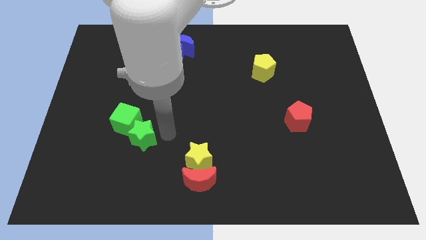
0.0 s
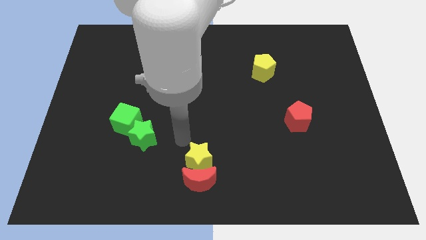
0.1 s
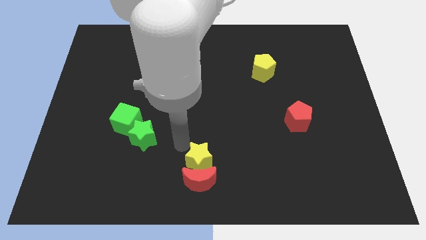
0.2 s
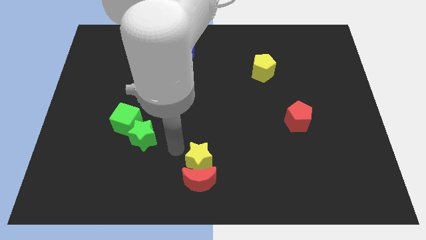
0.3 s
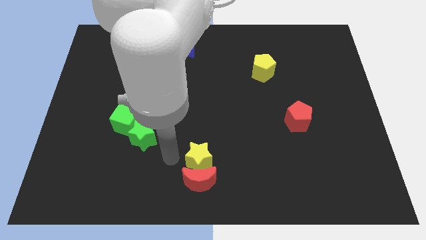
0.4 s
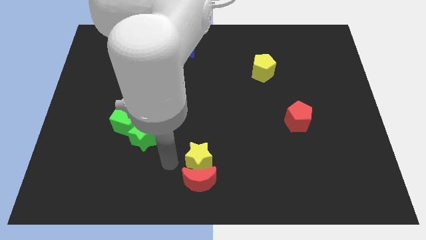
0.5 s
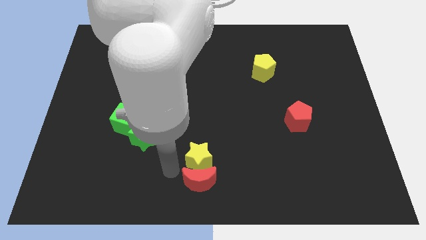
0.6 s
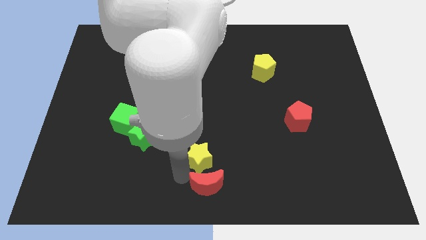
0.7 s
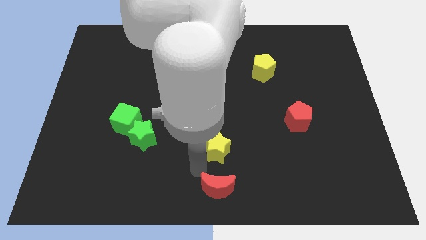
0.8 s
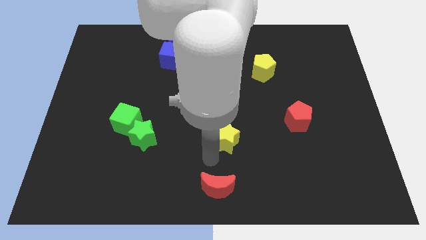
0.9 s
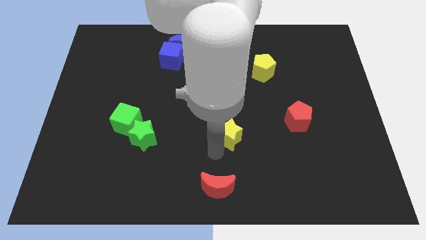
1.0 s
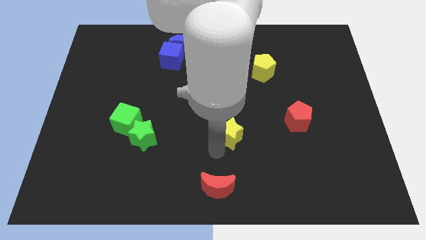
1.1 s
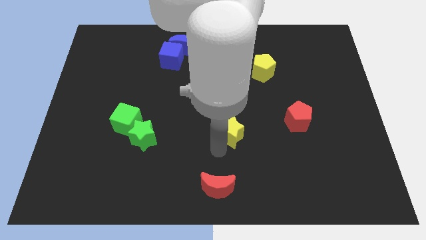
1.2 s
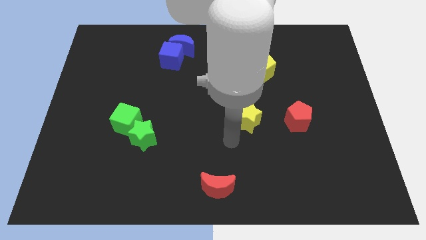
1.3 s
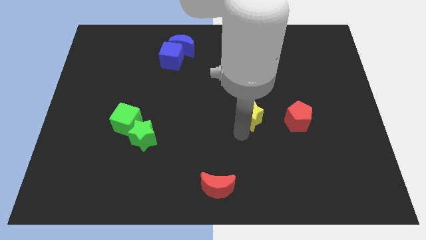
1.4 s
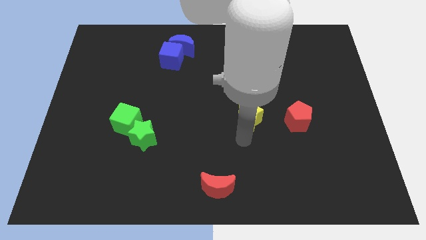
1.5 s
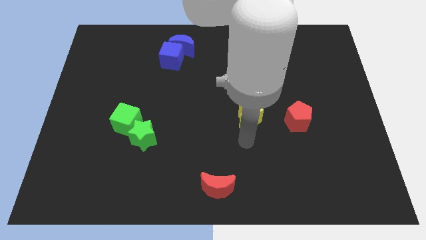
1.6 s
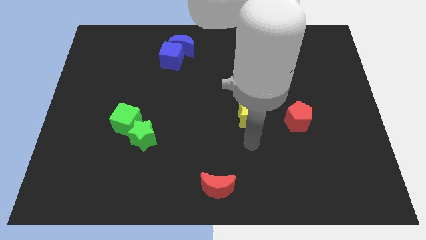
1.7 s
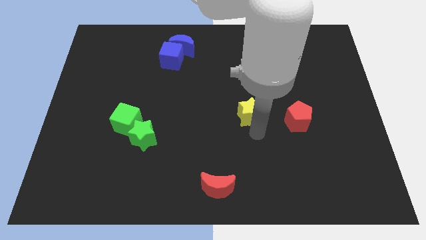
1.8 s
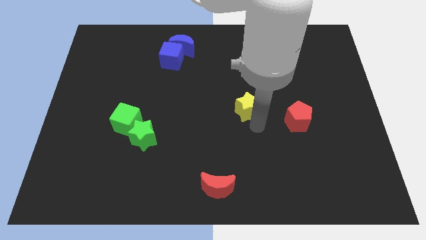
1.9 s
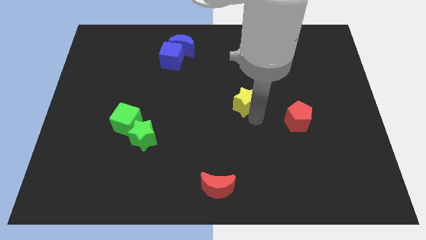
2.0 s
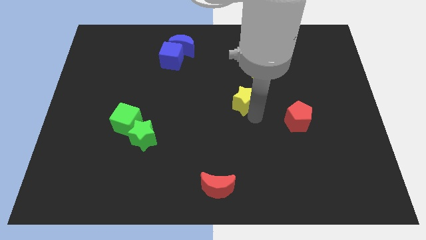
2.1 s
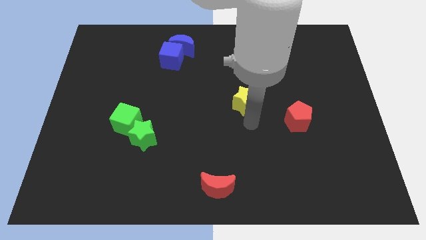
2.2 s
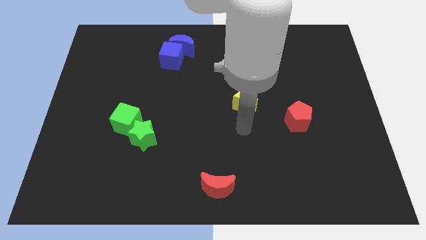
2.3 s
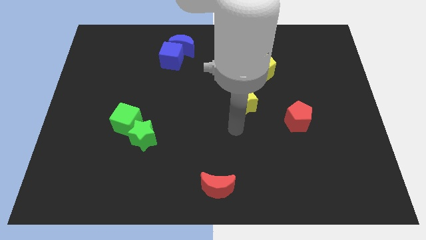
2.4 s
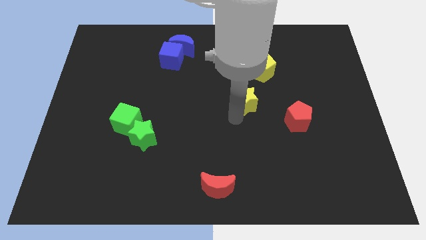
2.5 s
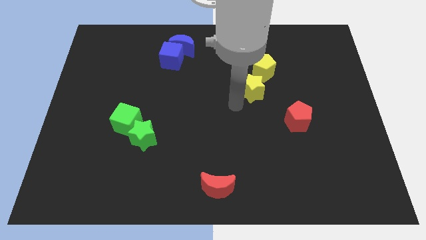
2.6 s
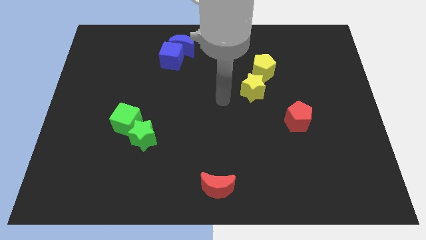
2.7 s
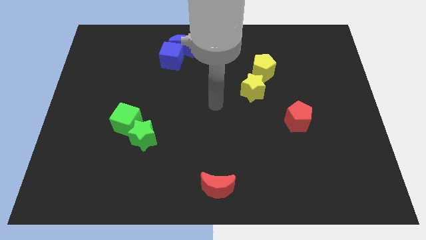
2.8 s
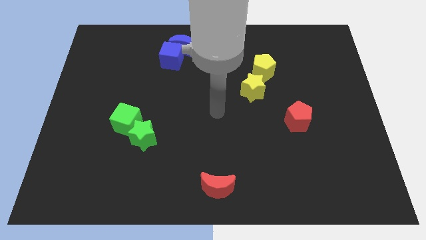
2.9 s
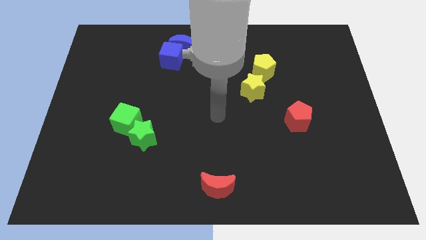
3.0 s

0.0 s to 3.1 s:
separate the yellow star from the red crescent

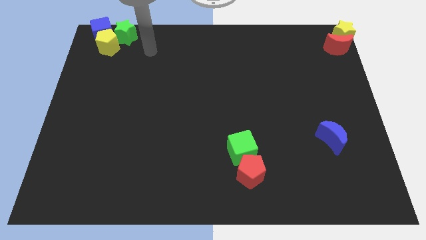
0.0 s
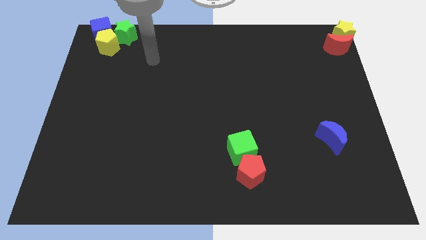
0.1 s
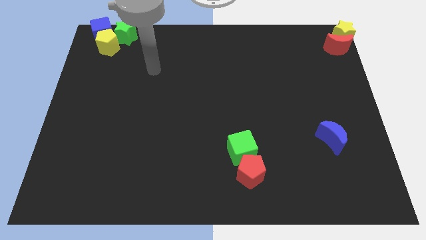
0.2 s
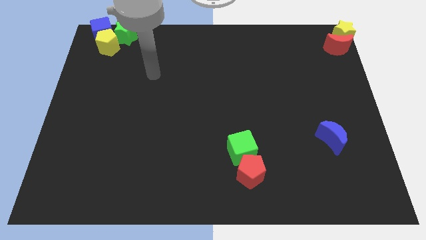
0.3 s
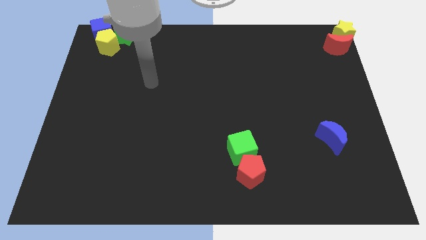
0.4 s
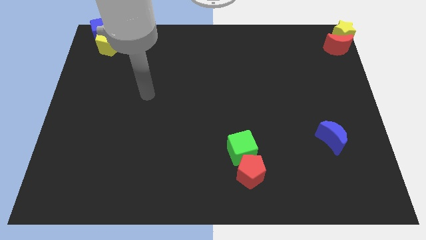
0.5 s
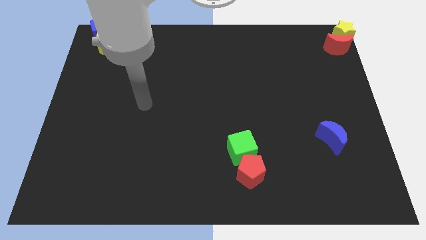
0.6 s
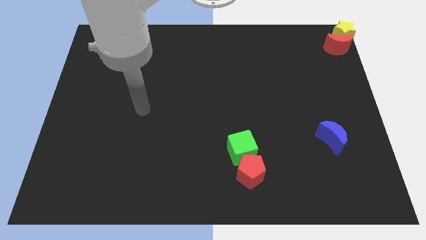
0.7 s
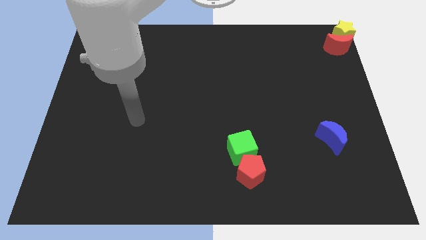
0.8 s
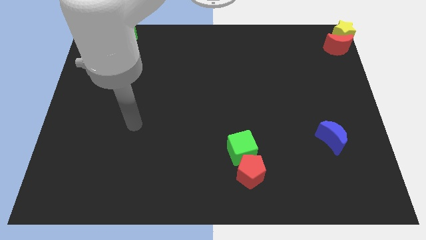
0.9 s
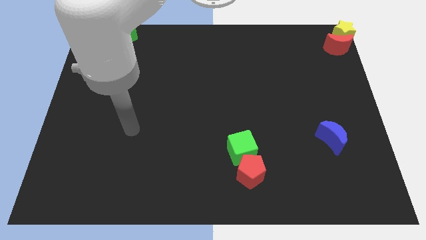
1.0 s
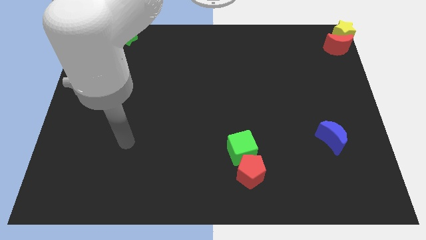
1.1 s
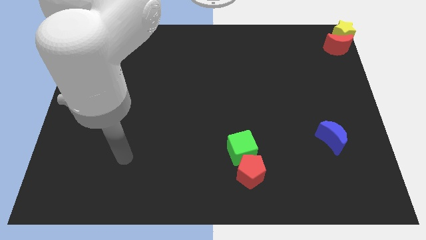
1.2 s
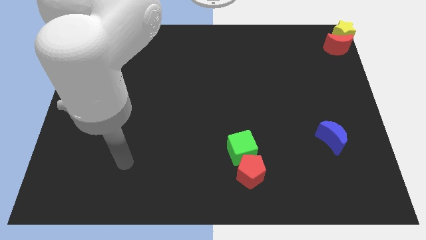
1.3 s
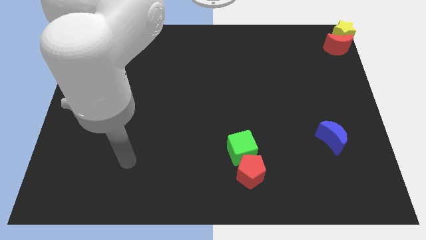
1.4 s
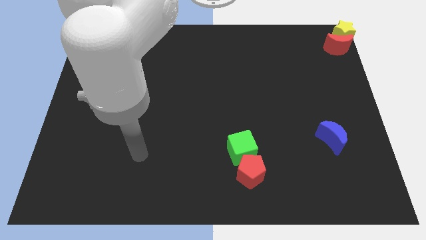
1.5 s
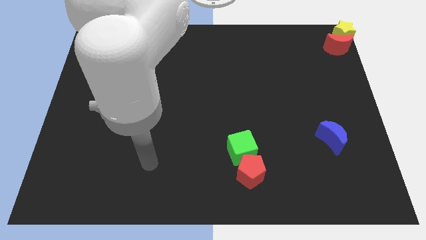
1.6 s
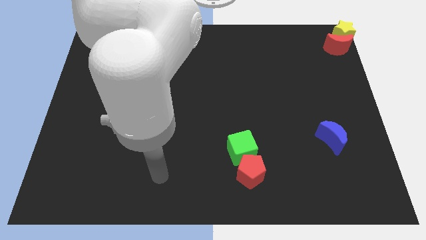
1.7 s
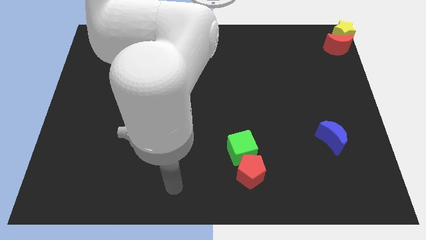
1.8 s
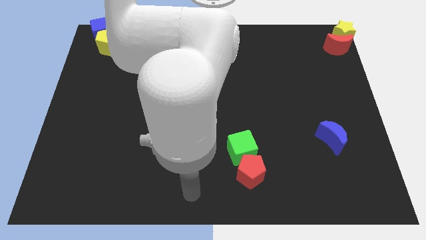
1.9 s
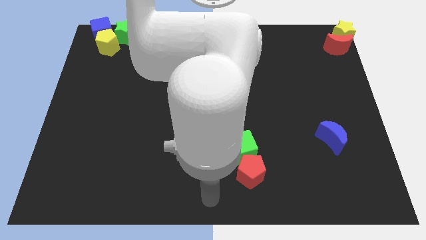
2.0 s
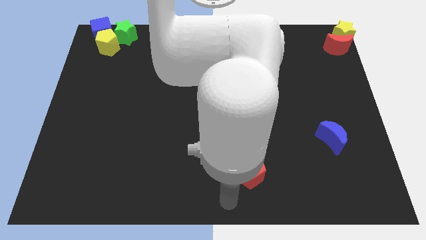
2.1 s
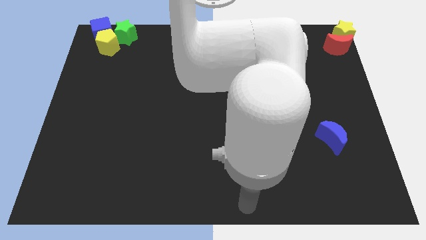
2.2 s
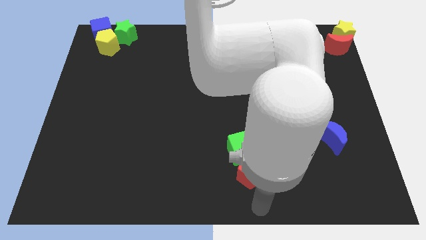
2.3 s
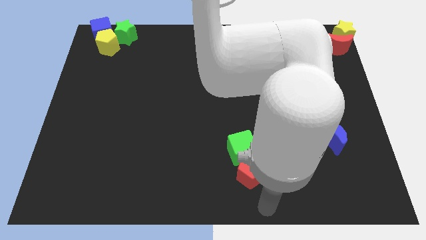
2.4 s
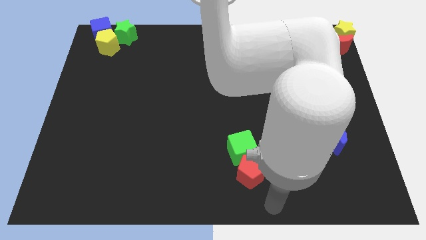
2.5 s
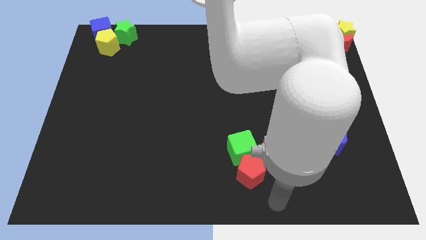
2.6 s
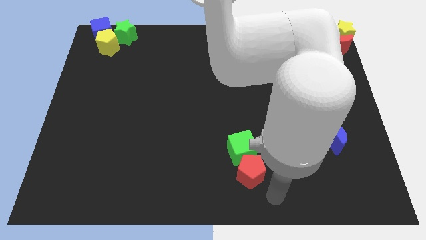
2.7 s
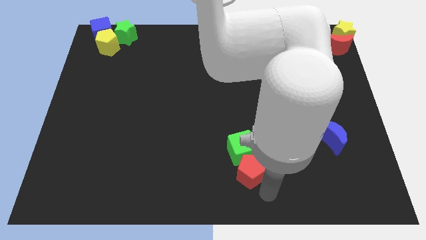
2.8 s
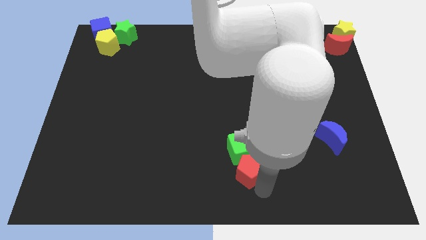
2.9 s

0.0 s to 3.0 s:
place the arm down to the red pentagon

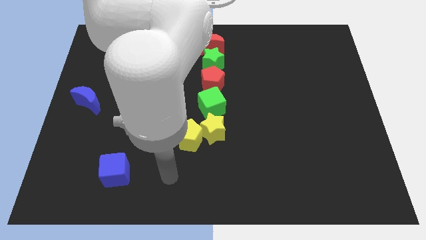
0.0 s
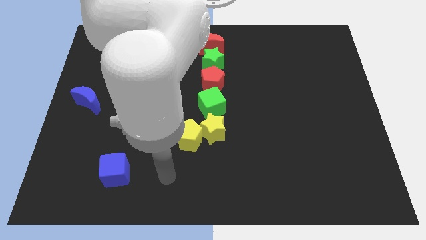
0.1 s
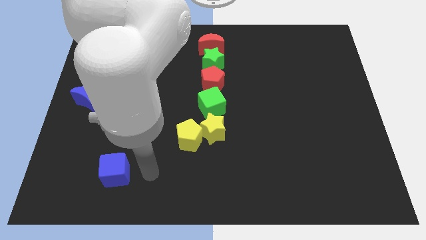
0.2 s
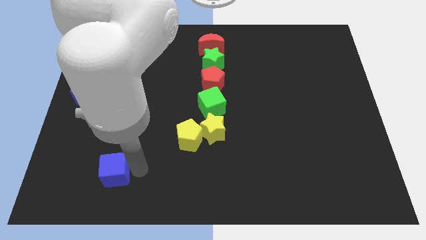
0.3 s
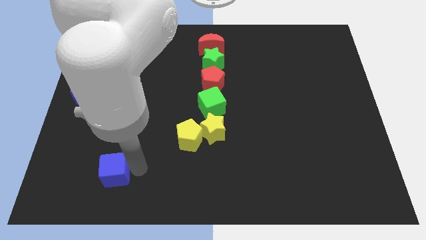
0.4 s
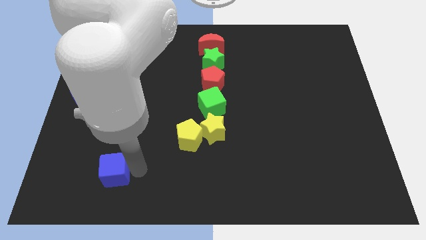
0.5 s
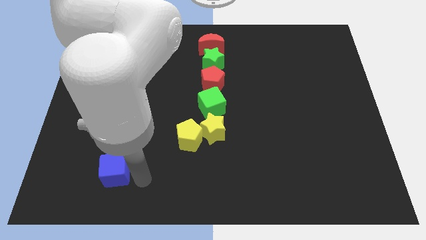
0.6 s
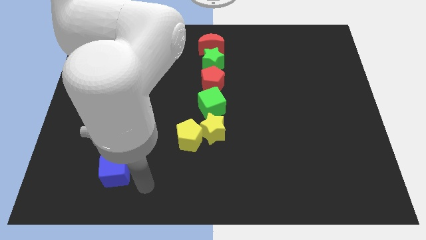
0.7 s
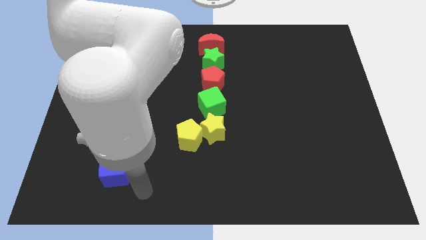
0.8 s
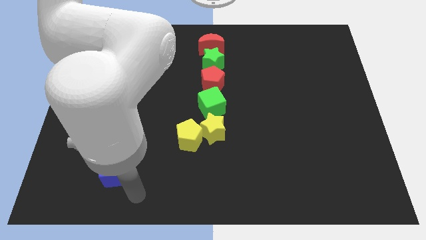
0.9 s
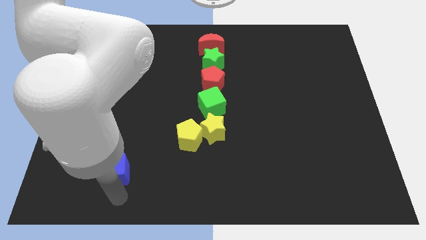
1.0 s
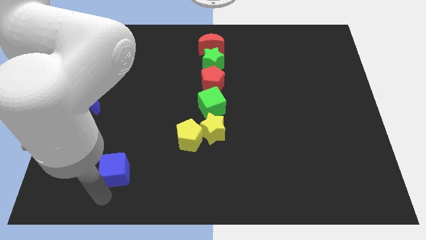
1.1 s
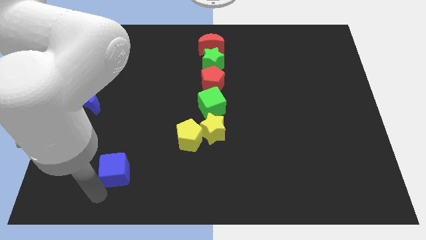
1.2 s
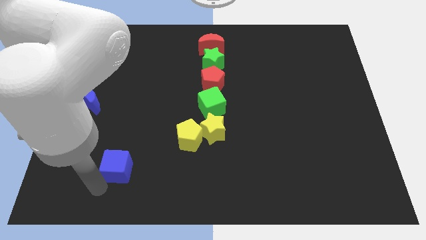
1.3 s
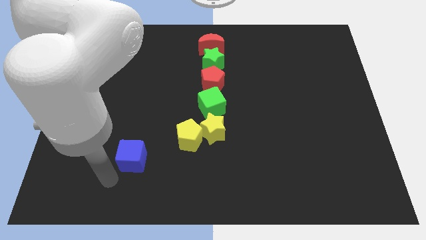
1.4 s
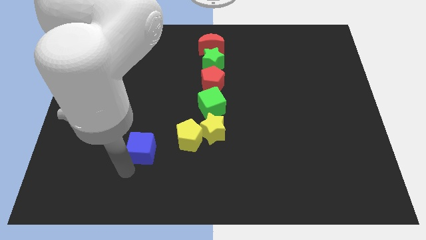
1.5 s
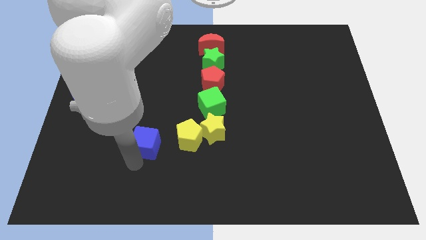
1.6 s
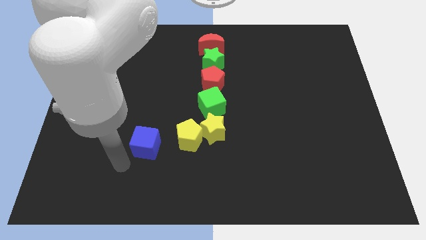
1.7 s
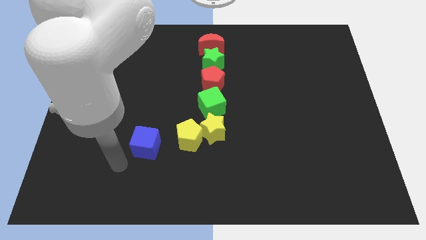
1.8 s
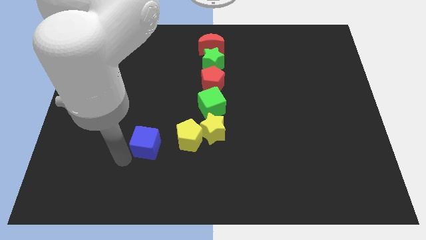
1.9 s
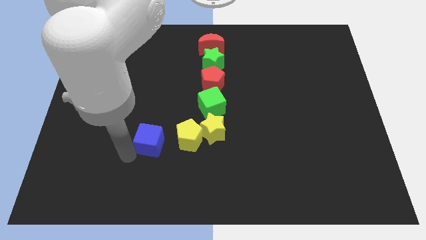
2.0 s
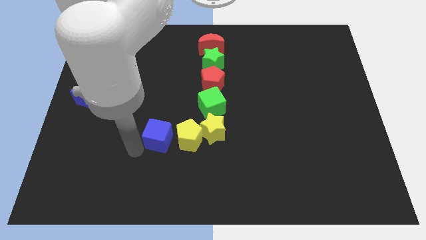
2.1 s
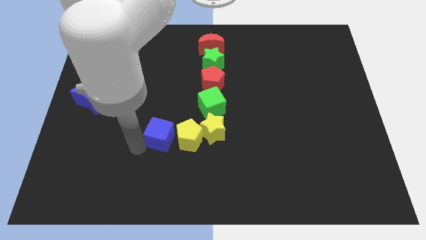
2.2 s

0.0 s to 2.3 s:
push the blue cube to the left of the yellow pentagon

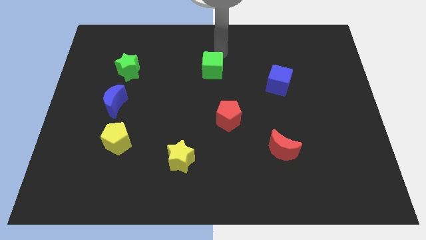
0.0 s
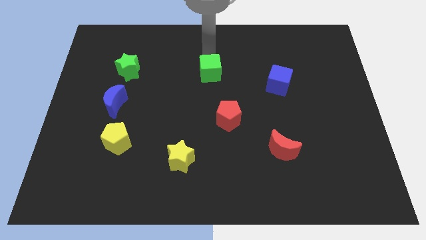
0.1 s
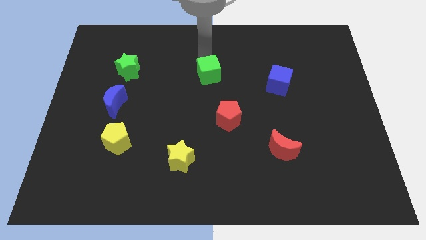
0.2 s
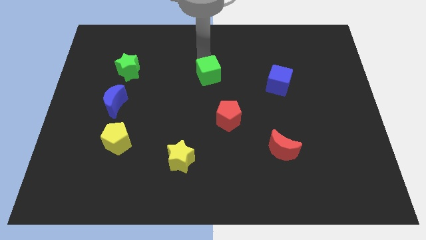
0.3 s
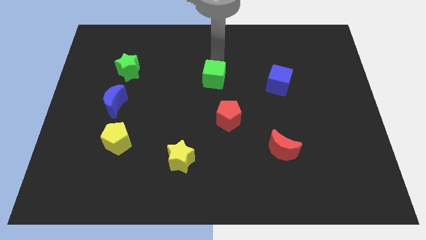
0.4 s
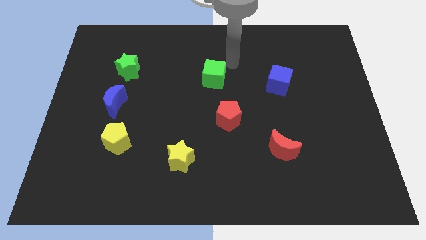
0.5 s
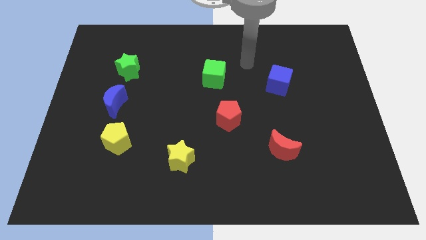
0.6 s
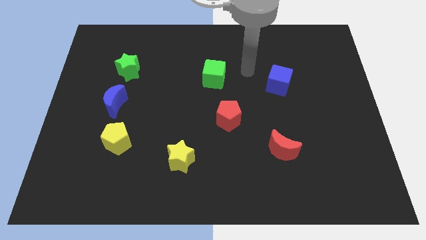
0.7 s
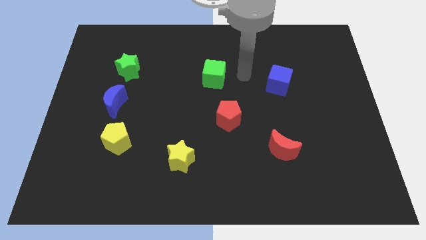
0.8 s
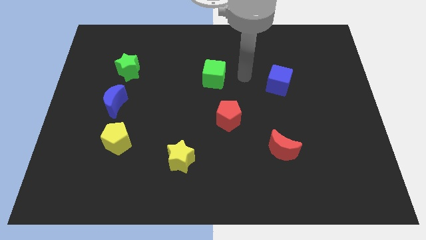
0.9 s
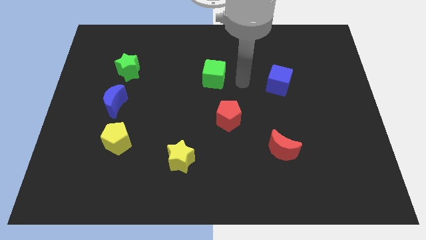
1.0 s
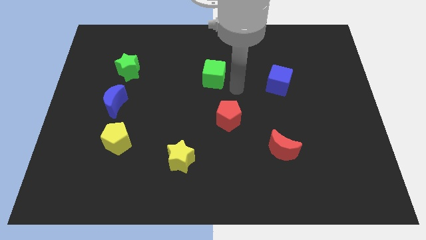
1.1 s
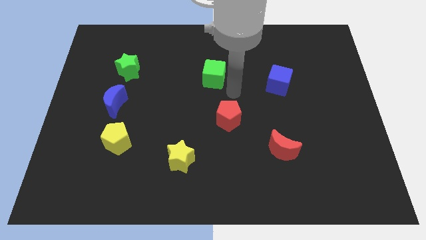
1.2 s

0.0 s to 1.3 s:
push the green cube to the bottom of the board
